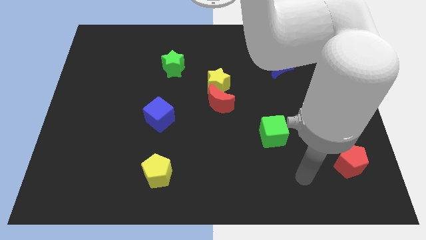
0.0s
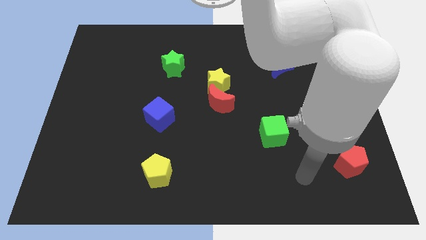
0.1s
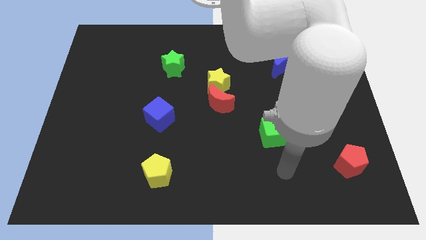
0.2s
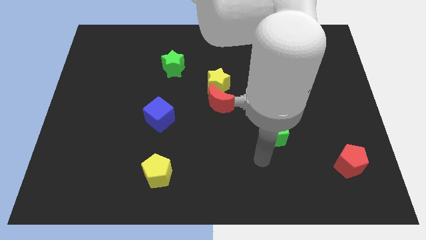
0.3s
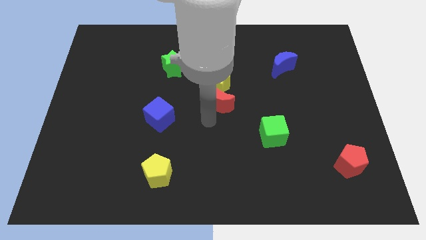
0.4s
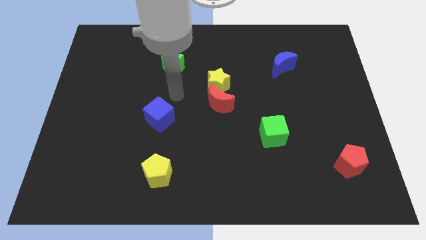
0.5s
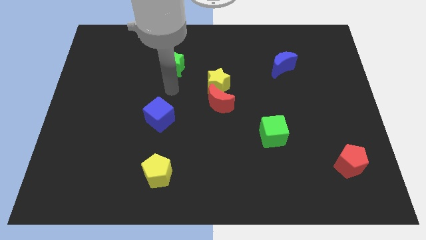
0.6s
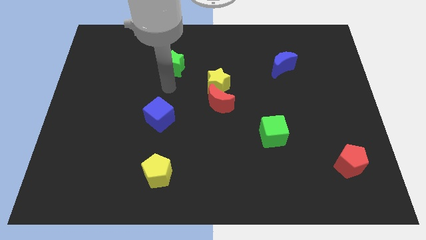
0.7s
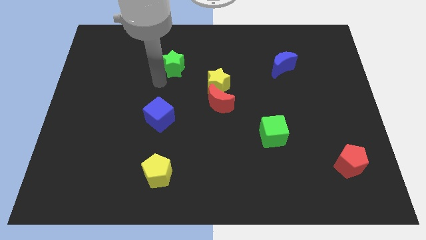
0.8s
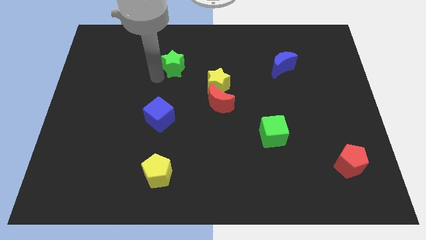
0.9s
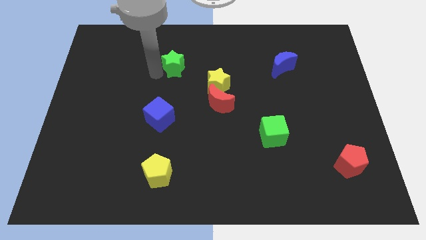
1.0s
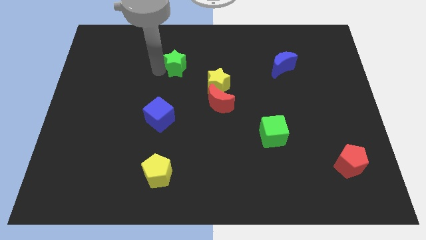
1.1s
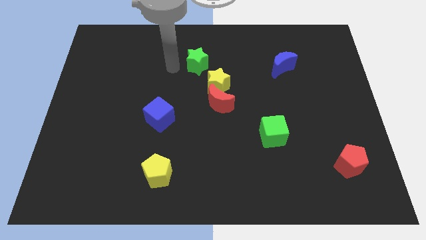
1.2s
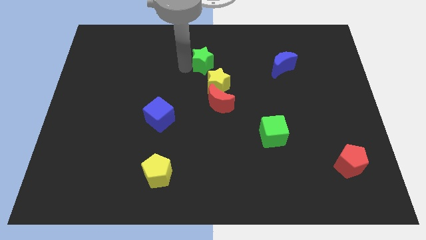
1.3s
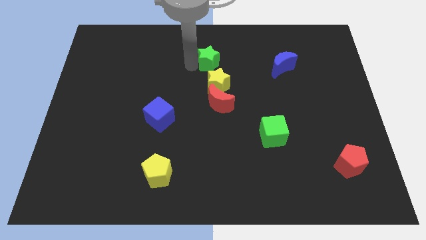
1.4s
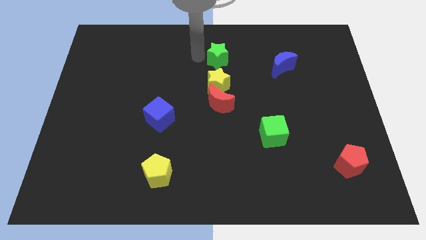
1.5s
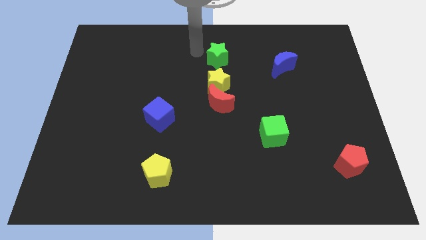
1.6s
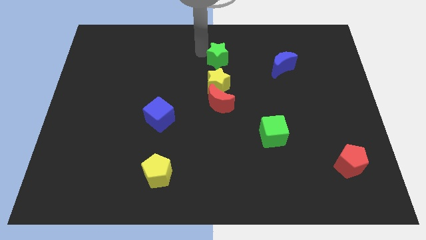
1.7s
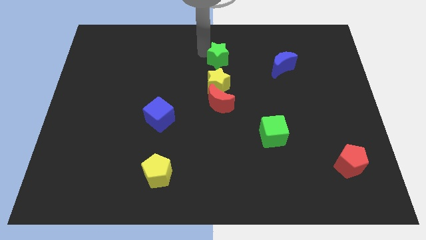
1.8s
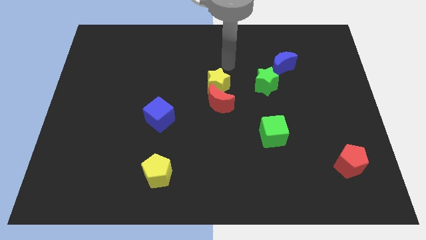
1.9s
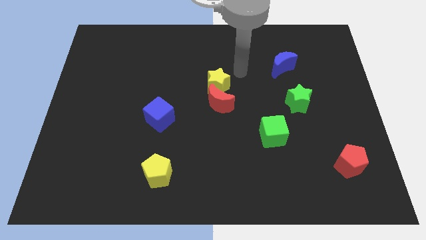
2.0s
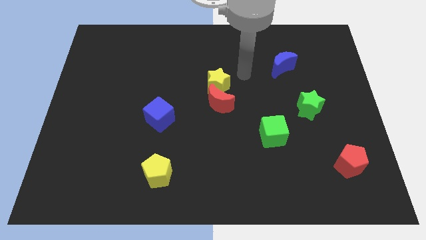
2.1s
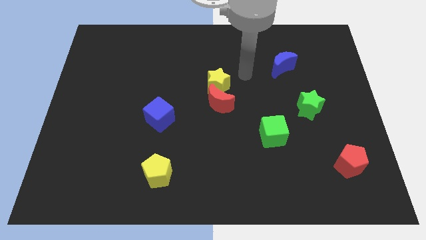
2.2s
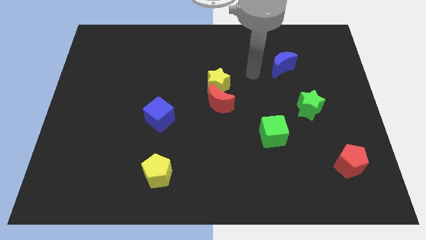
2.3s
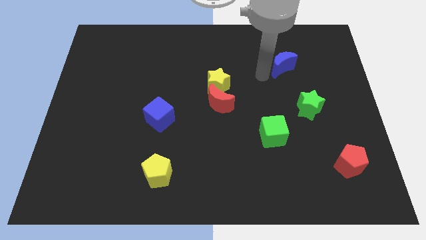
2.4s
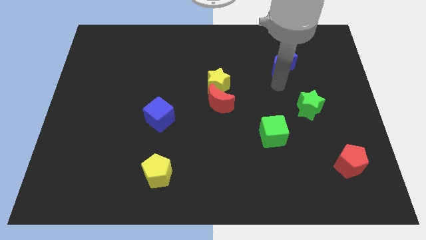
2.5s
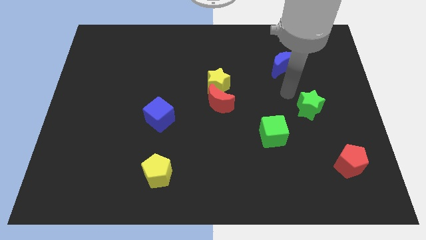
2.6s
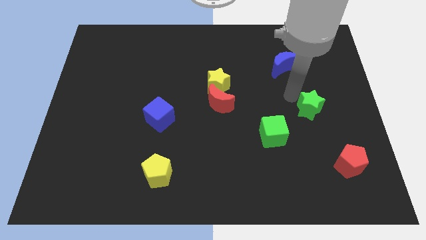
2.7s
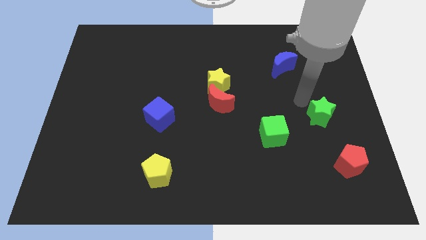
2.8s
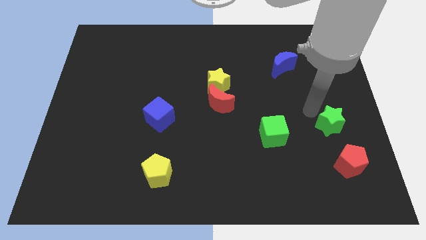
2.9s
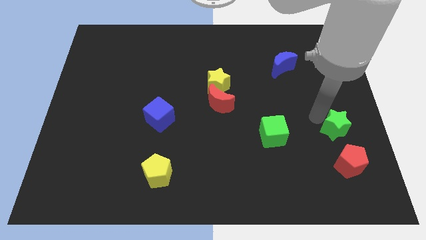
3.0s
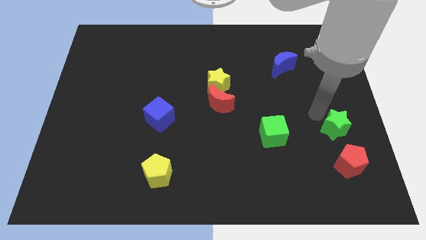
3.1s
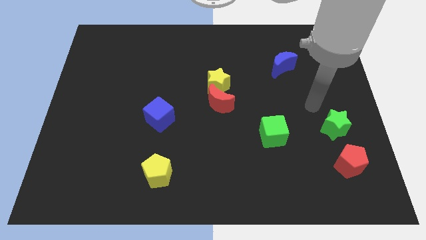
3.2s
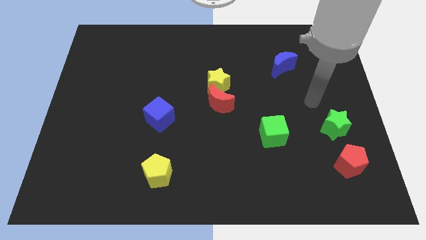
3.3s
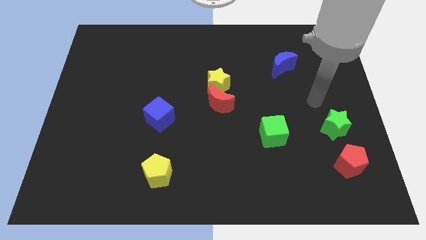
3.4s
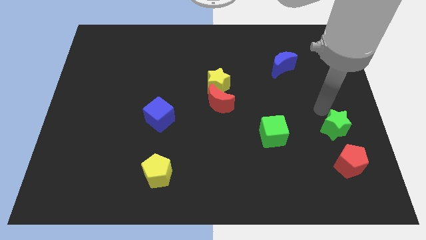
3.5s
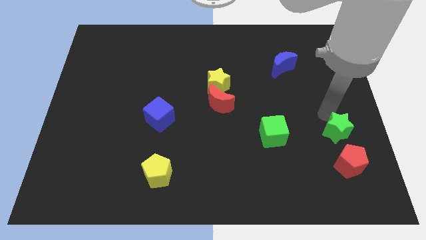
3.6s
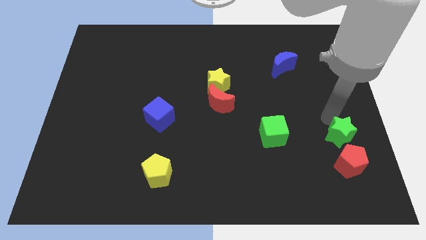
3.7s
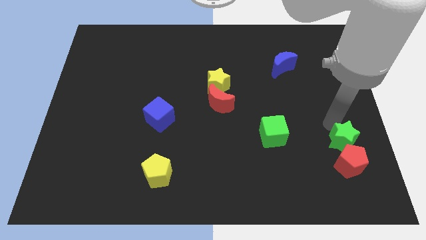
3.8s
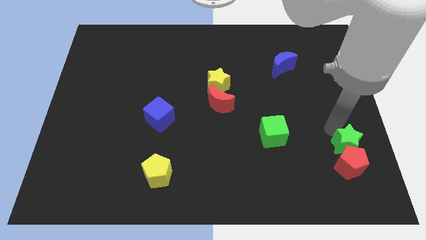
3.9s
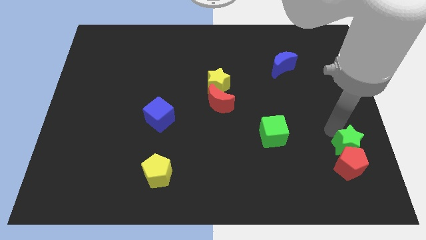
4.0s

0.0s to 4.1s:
slide the green star towards the red pentagon

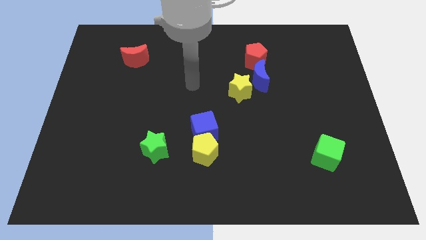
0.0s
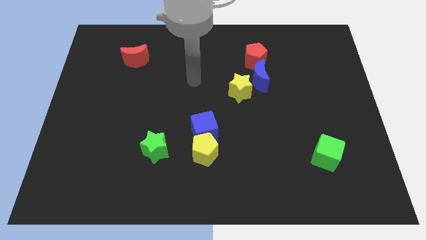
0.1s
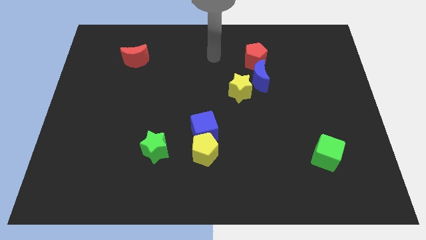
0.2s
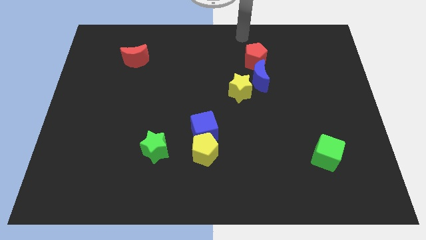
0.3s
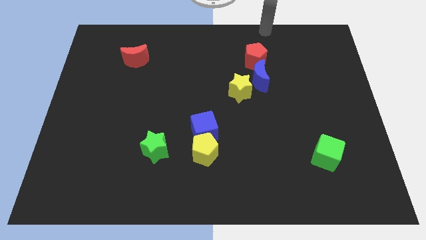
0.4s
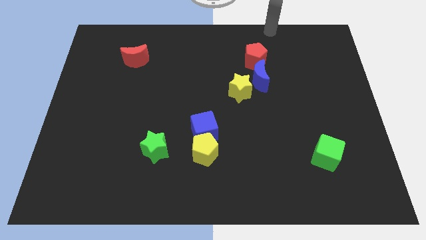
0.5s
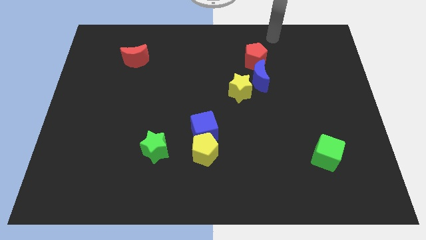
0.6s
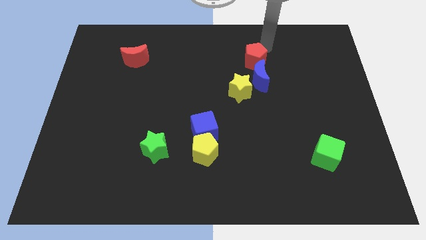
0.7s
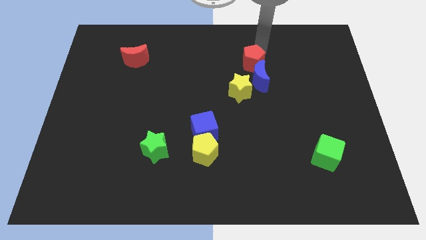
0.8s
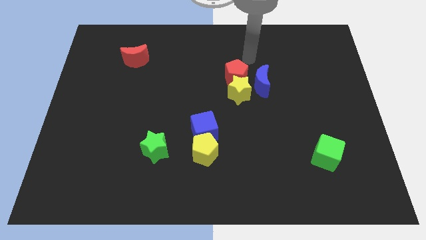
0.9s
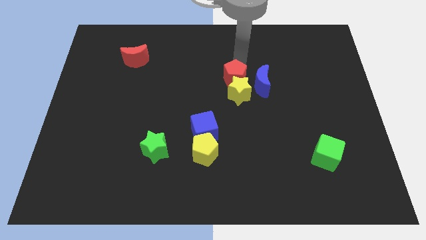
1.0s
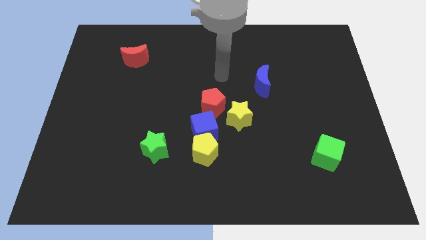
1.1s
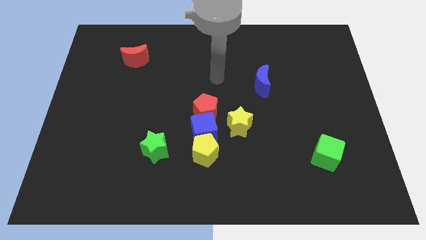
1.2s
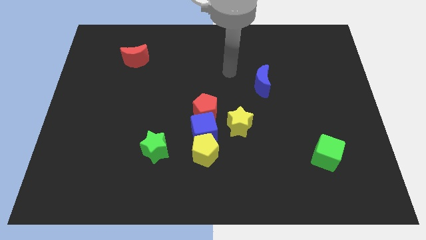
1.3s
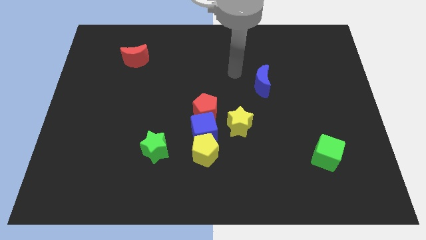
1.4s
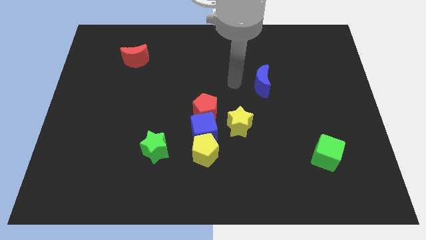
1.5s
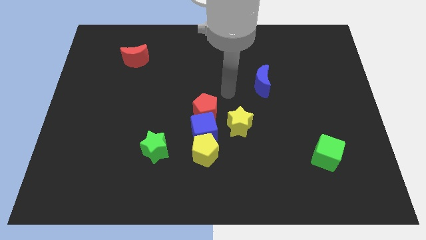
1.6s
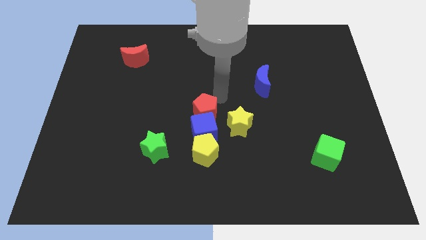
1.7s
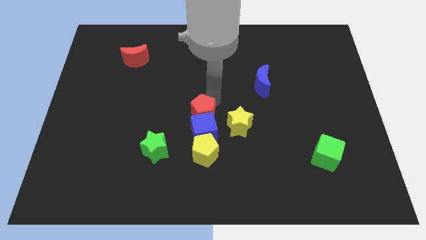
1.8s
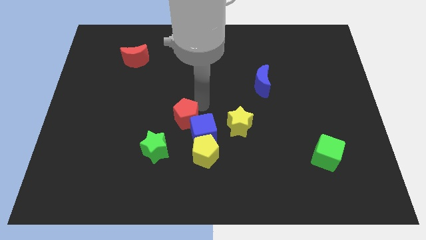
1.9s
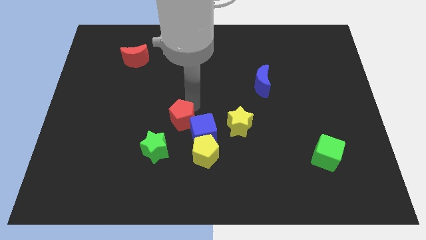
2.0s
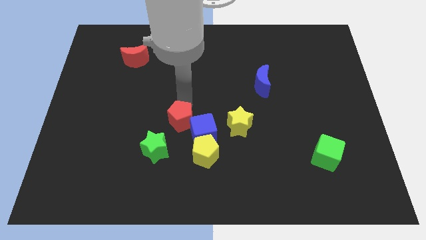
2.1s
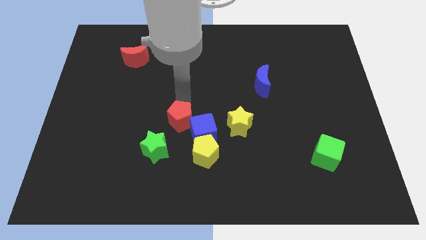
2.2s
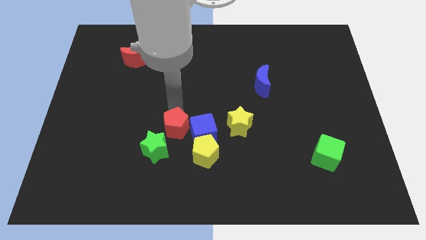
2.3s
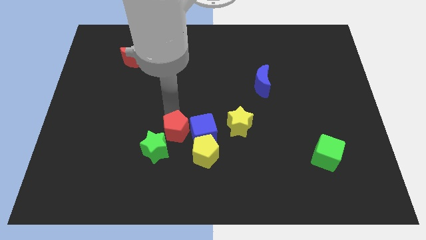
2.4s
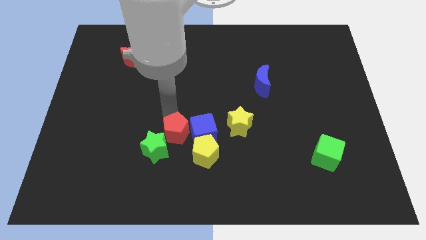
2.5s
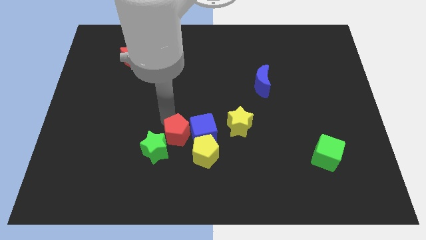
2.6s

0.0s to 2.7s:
put the red pentagon to the green star

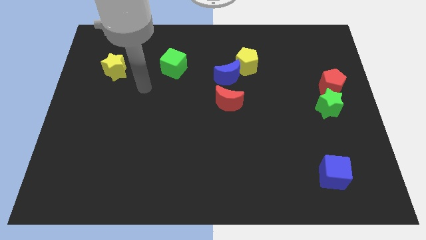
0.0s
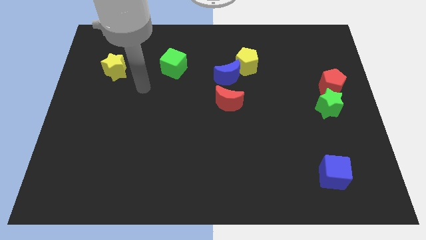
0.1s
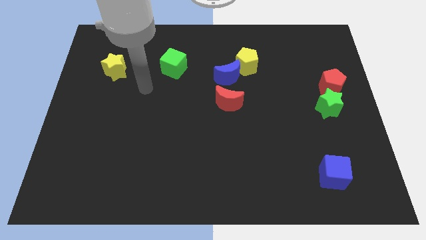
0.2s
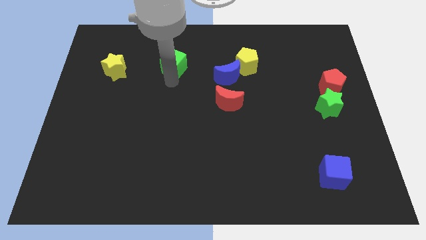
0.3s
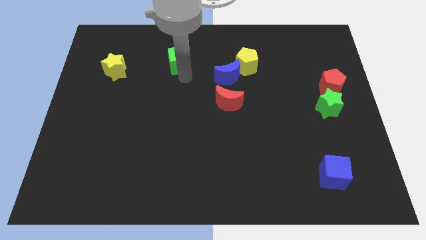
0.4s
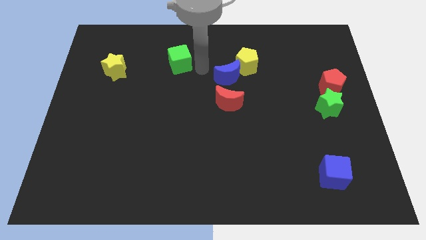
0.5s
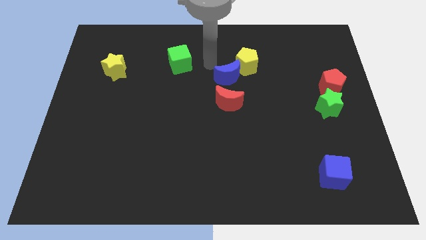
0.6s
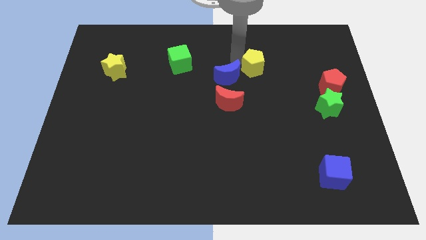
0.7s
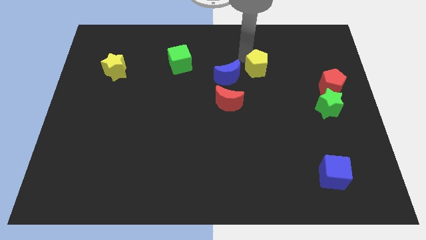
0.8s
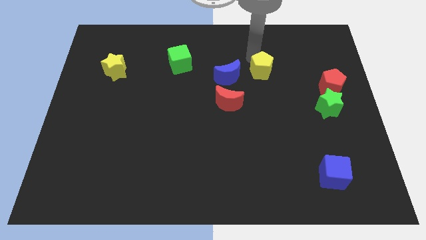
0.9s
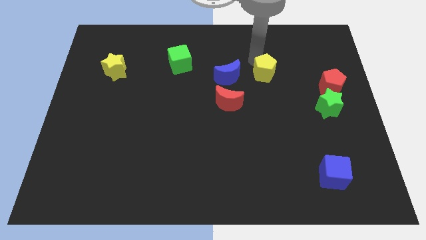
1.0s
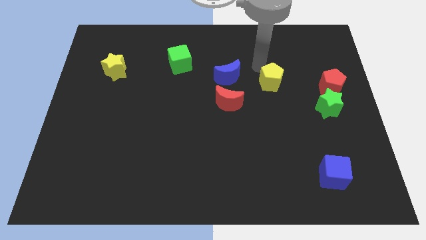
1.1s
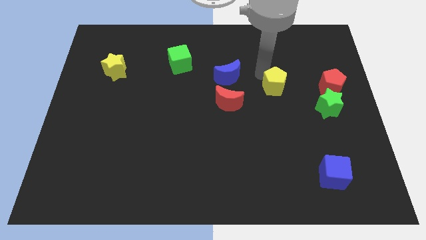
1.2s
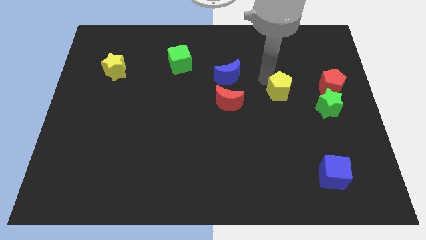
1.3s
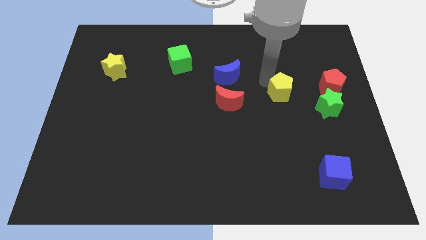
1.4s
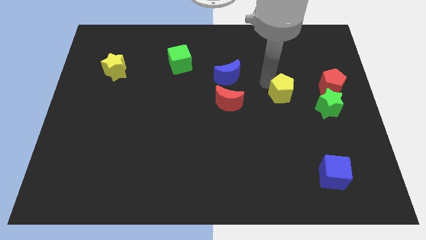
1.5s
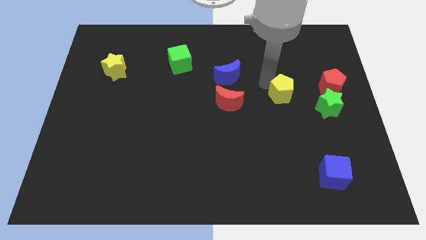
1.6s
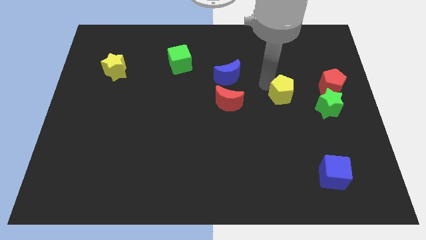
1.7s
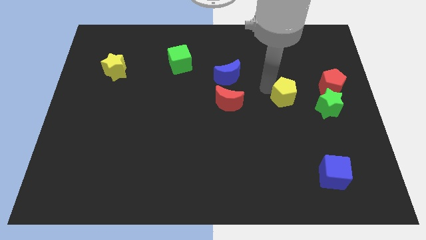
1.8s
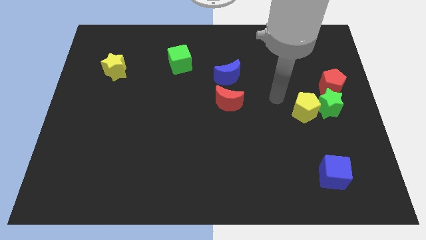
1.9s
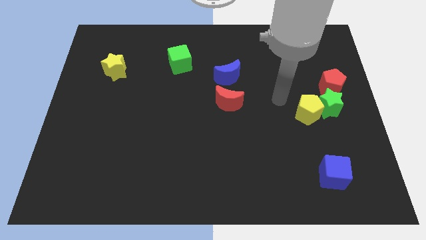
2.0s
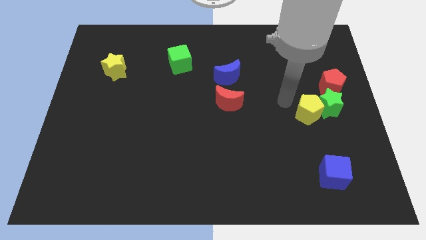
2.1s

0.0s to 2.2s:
slide the yellow pentagon to the green star
